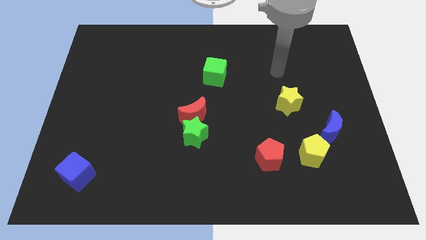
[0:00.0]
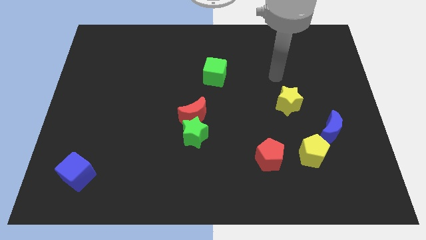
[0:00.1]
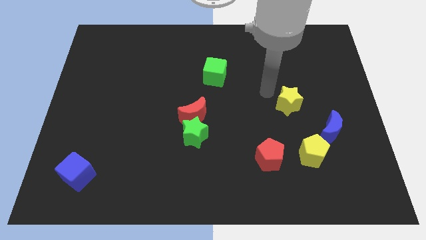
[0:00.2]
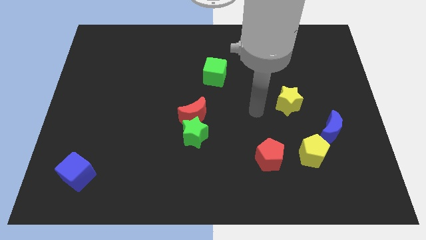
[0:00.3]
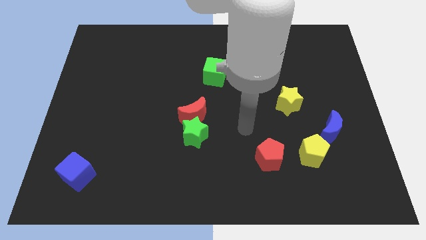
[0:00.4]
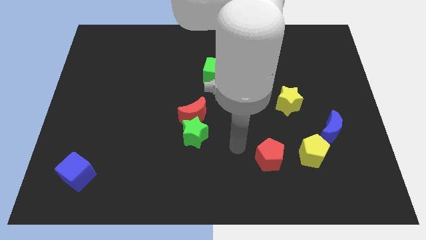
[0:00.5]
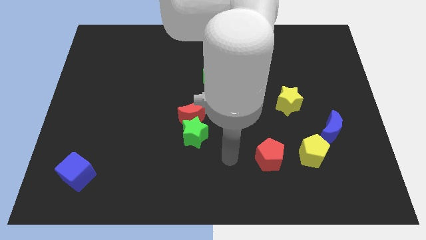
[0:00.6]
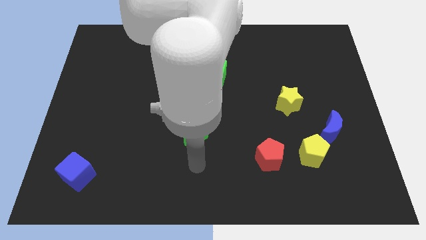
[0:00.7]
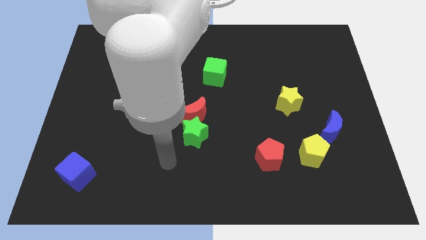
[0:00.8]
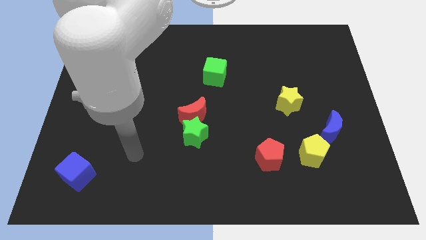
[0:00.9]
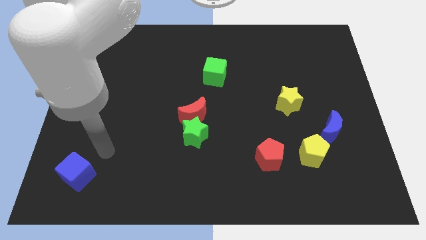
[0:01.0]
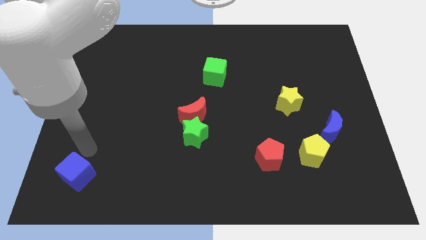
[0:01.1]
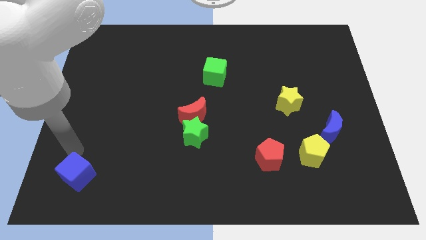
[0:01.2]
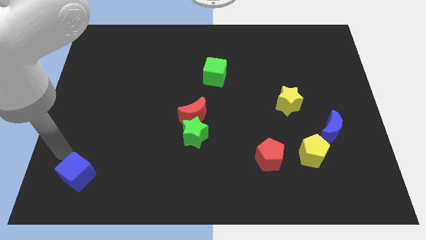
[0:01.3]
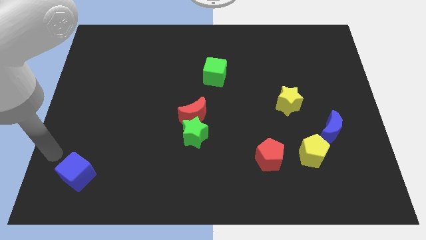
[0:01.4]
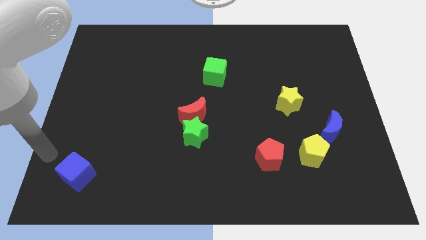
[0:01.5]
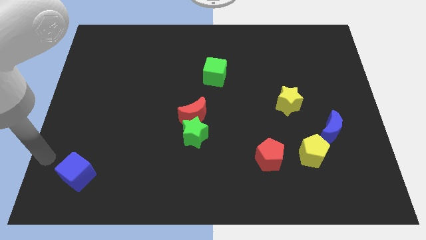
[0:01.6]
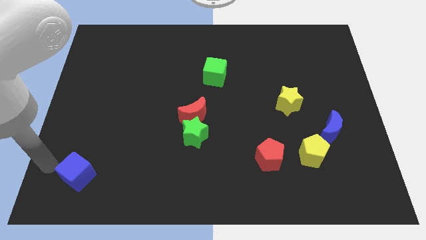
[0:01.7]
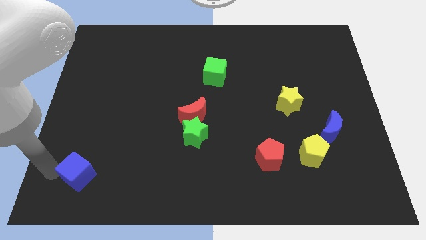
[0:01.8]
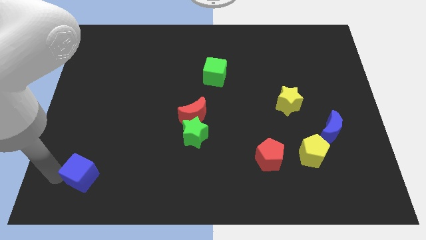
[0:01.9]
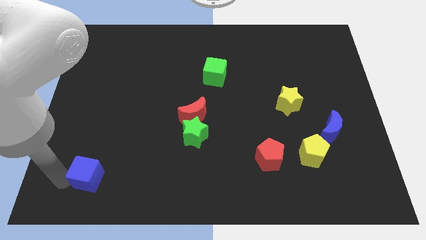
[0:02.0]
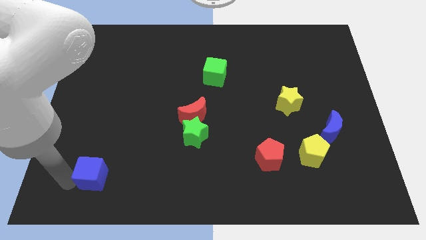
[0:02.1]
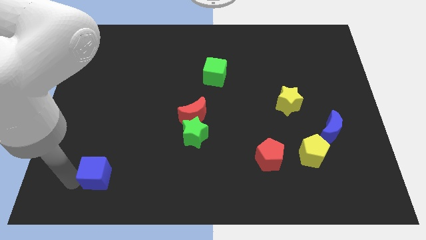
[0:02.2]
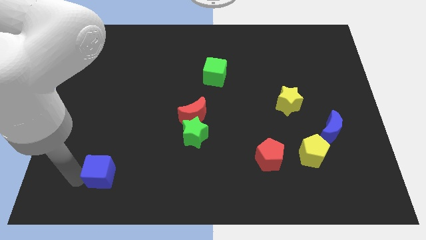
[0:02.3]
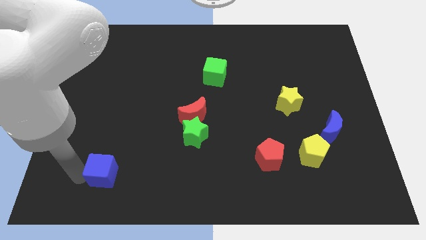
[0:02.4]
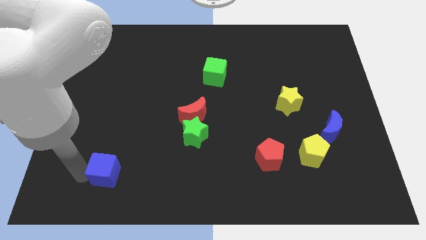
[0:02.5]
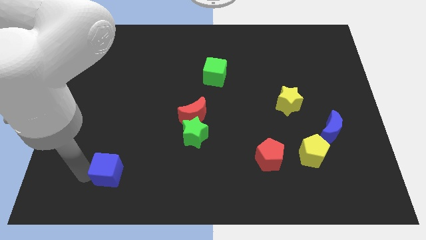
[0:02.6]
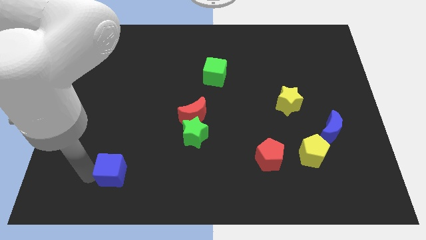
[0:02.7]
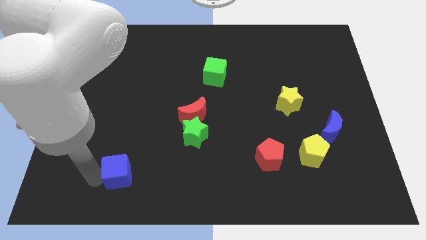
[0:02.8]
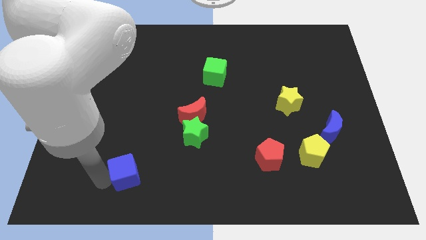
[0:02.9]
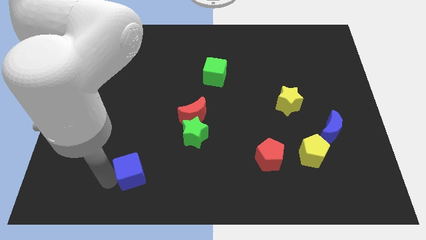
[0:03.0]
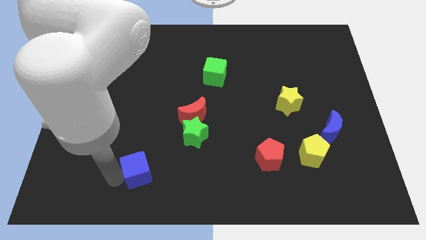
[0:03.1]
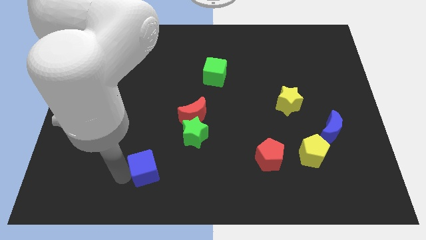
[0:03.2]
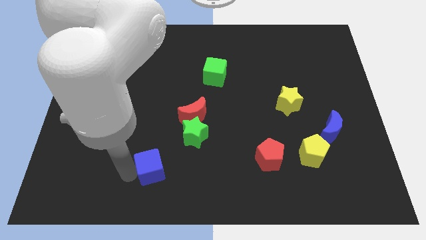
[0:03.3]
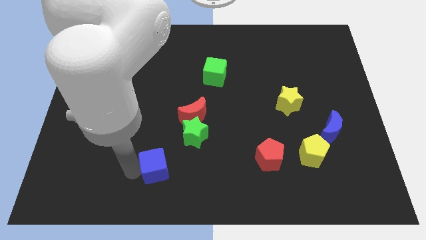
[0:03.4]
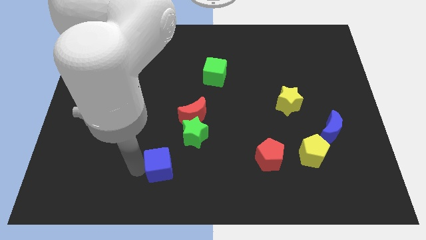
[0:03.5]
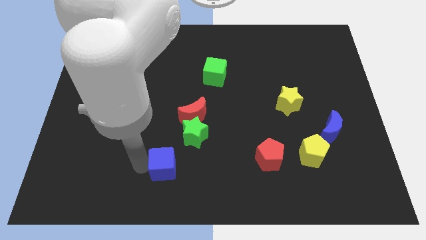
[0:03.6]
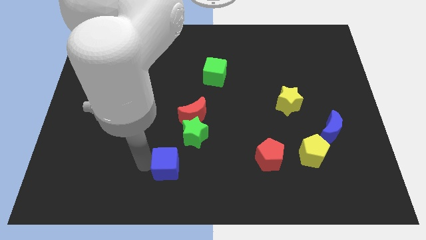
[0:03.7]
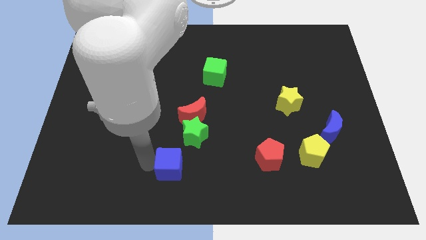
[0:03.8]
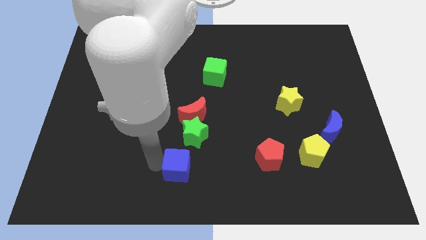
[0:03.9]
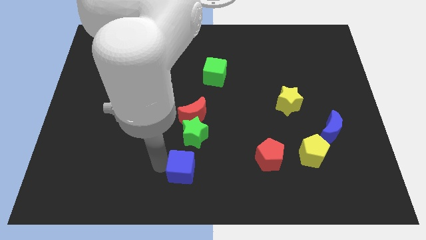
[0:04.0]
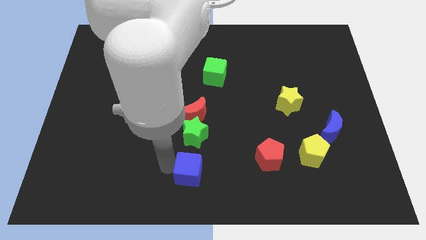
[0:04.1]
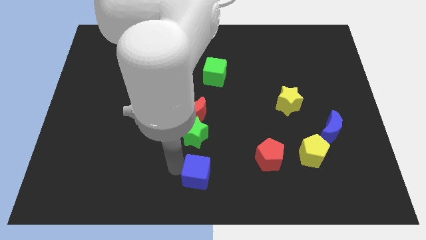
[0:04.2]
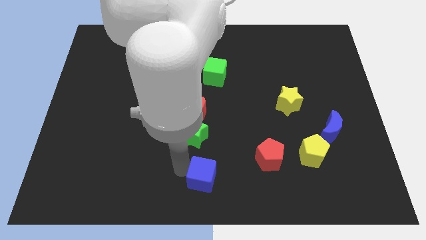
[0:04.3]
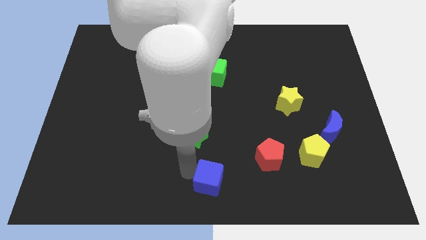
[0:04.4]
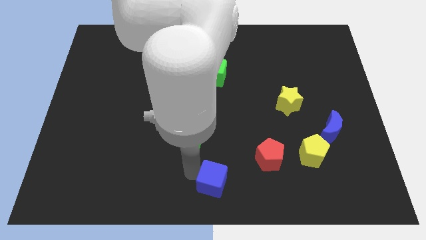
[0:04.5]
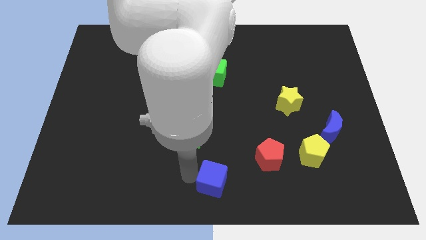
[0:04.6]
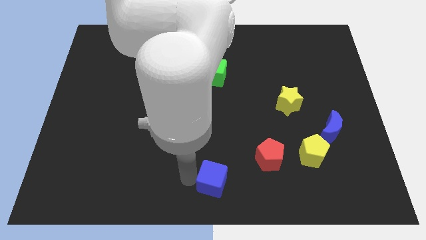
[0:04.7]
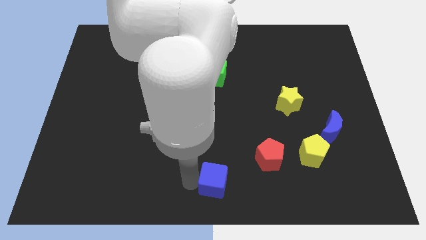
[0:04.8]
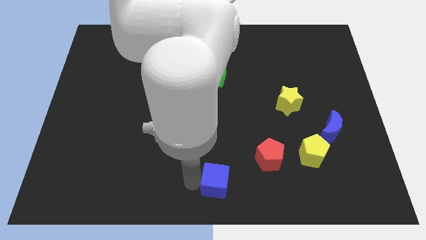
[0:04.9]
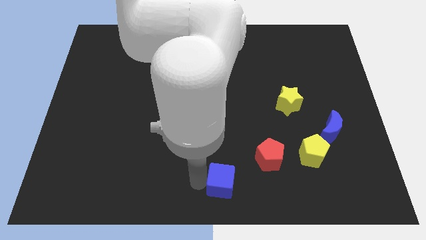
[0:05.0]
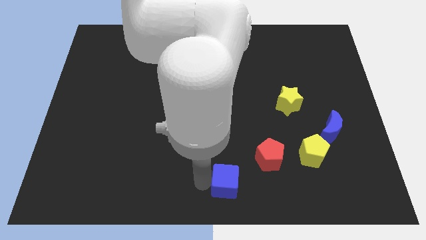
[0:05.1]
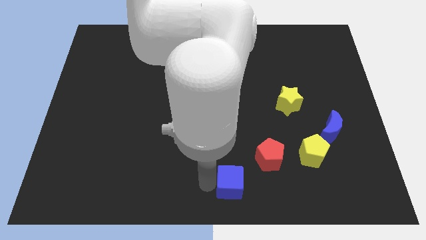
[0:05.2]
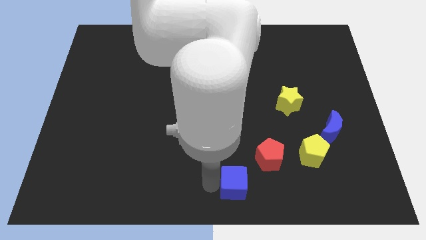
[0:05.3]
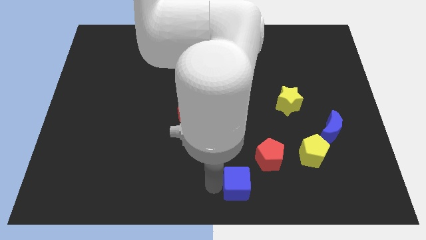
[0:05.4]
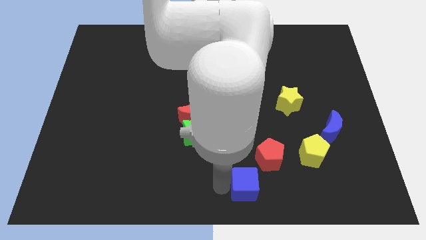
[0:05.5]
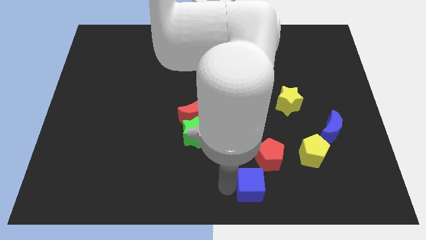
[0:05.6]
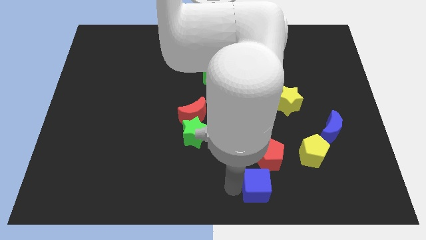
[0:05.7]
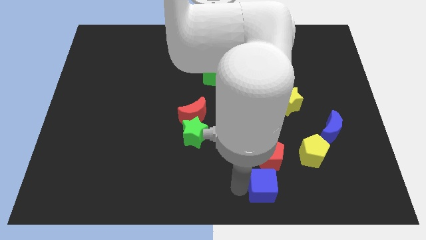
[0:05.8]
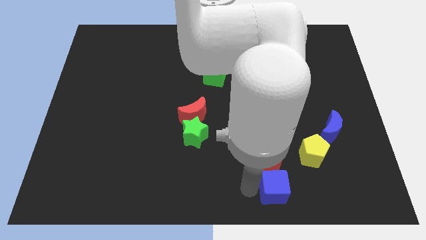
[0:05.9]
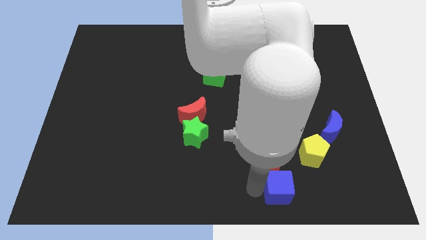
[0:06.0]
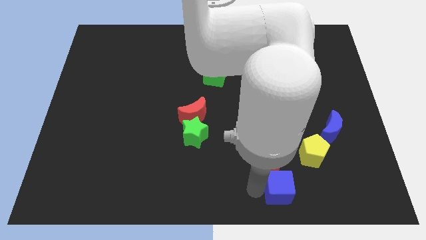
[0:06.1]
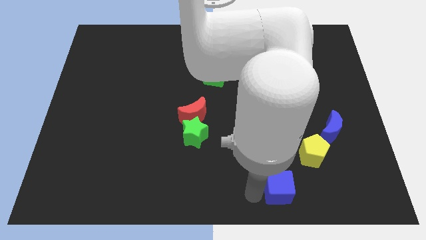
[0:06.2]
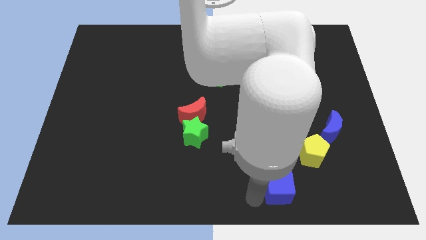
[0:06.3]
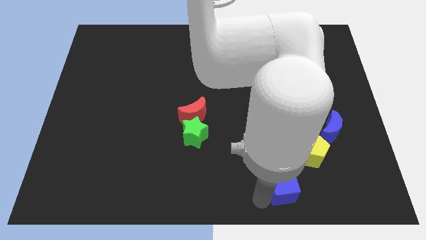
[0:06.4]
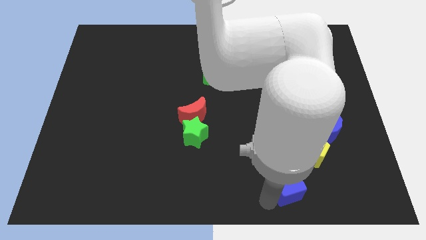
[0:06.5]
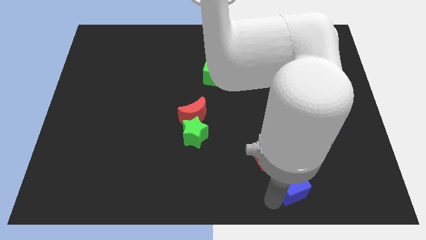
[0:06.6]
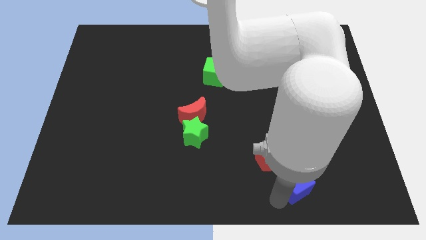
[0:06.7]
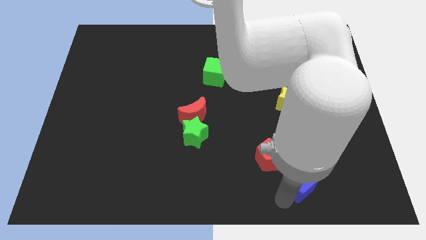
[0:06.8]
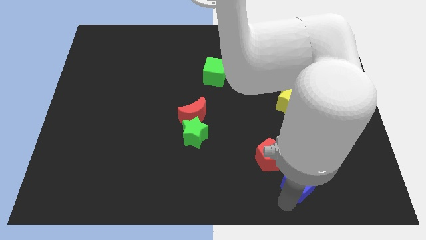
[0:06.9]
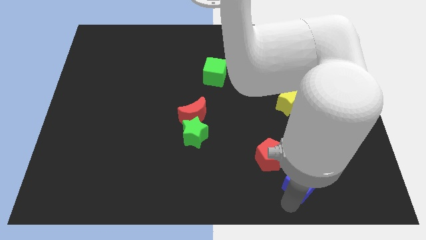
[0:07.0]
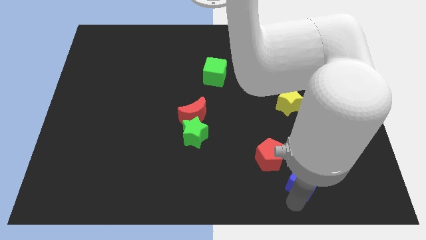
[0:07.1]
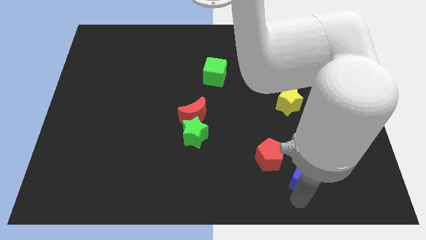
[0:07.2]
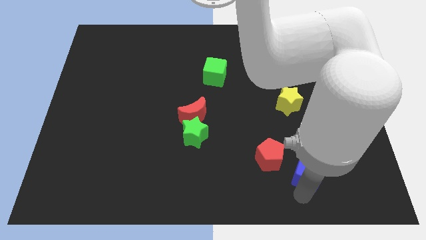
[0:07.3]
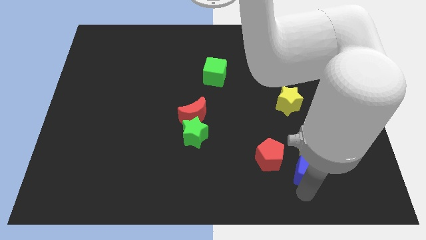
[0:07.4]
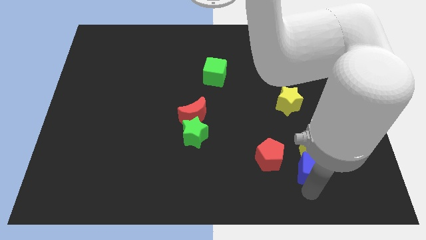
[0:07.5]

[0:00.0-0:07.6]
put the blue cube next to the yellow pentagon

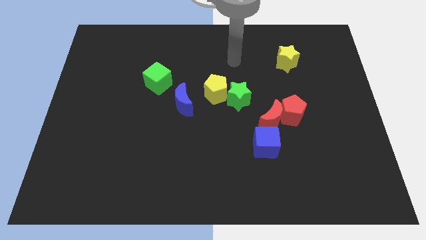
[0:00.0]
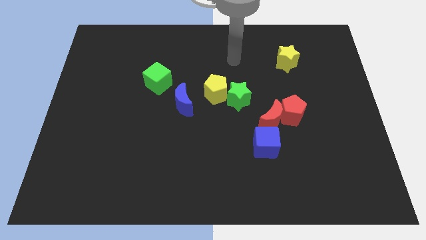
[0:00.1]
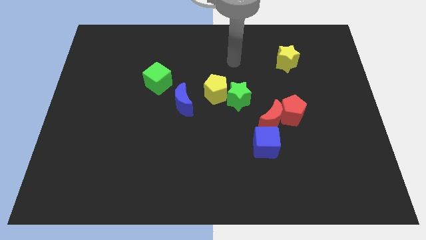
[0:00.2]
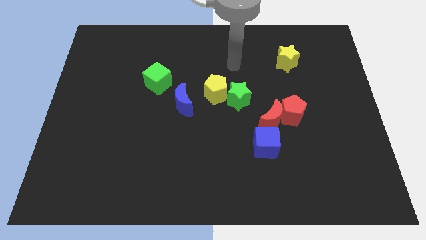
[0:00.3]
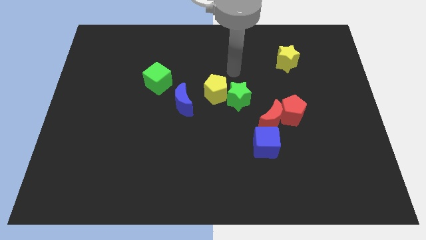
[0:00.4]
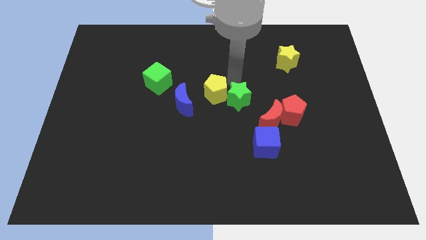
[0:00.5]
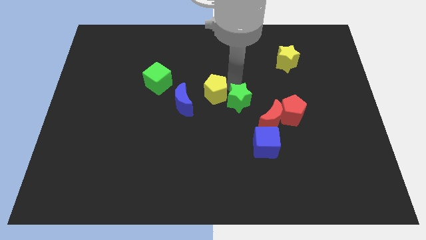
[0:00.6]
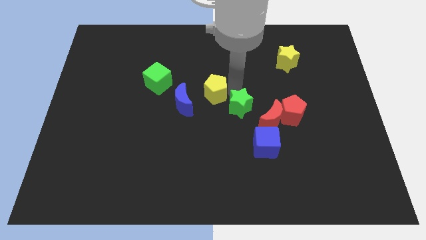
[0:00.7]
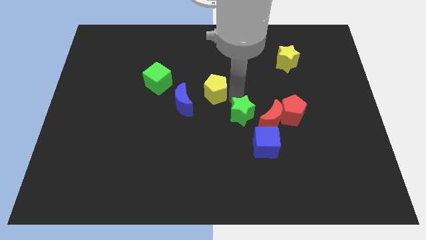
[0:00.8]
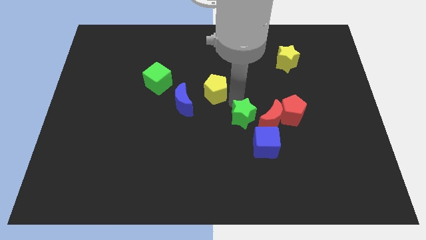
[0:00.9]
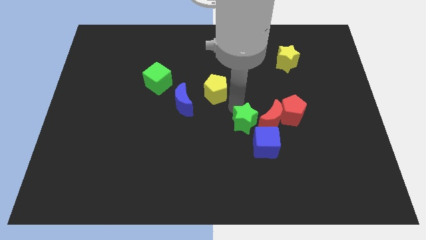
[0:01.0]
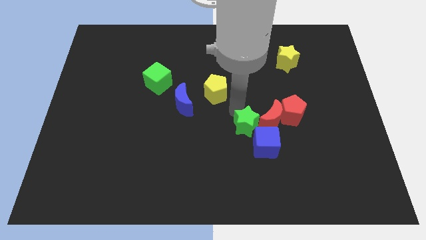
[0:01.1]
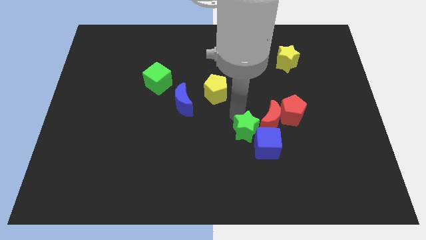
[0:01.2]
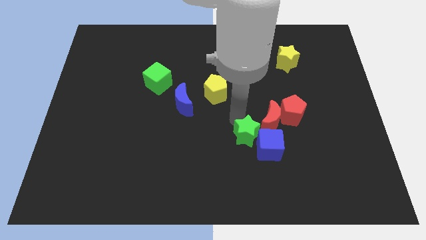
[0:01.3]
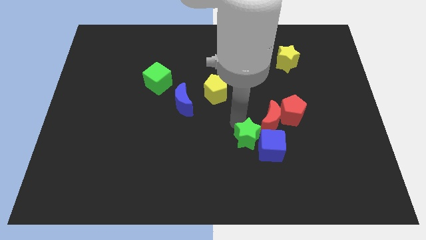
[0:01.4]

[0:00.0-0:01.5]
push the green star close to the blue cube
